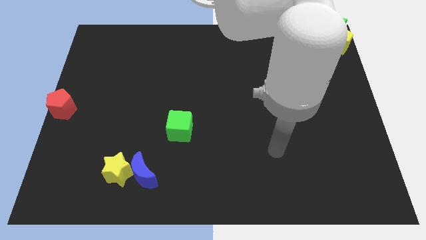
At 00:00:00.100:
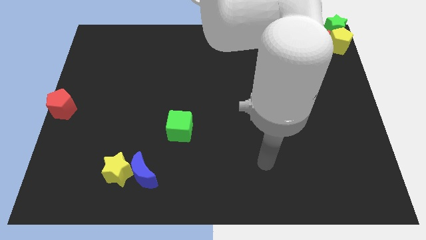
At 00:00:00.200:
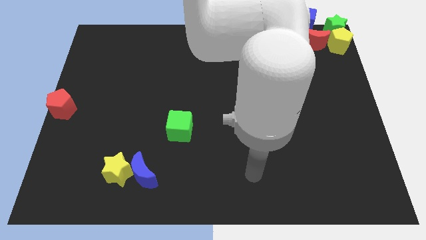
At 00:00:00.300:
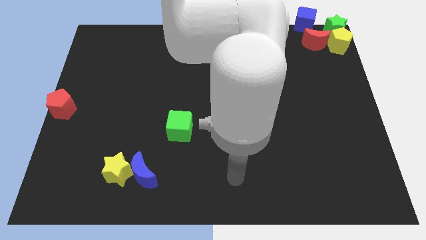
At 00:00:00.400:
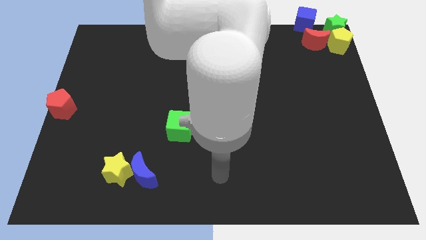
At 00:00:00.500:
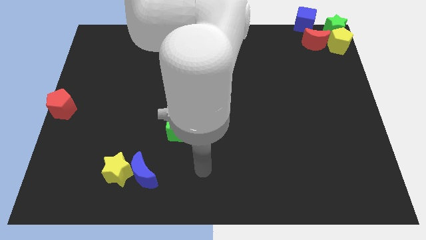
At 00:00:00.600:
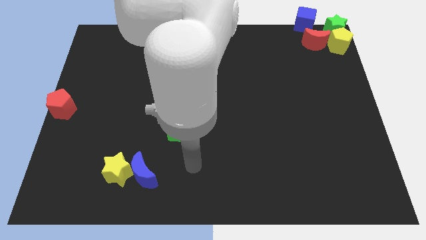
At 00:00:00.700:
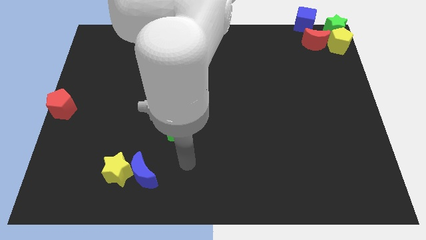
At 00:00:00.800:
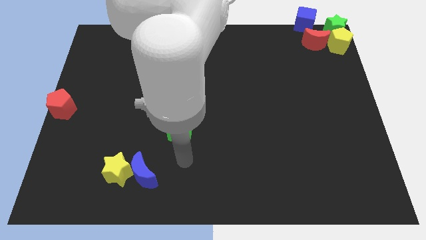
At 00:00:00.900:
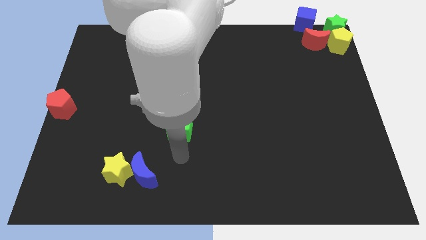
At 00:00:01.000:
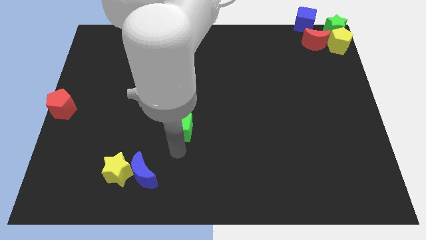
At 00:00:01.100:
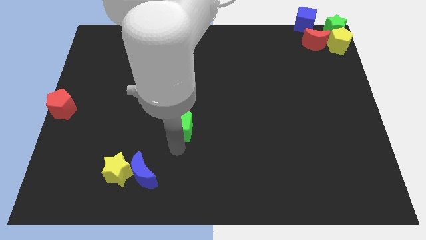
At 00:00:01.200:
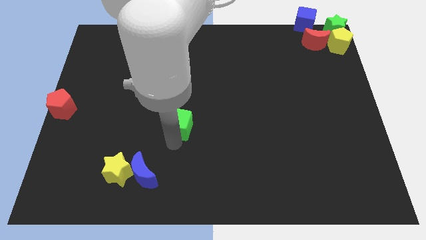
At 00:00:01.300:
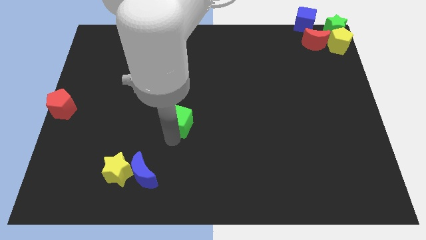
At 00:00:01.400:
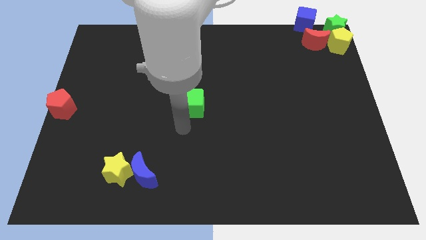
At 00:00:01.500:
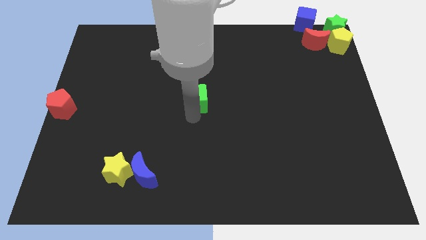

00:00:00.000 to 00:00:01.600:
place the green cube on the middle of the board

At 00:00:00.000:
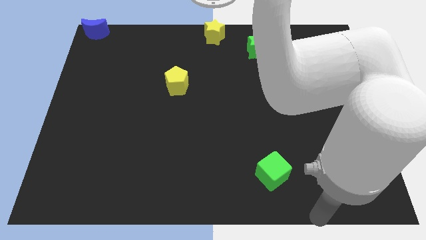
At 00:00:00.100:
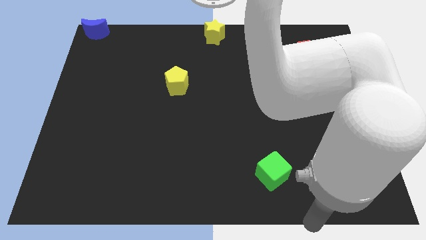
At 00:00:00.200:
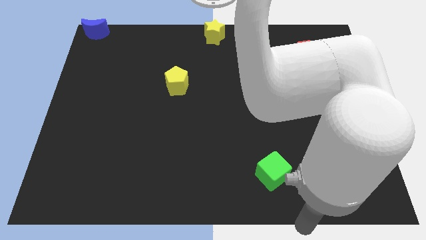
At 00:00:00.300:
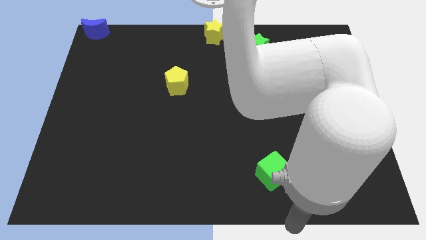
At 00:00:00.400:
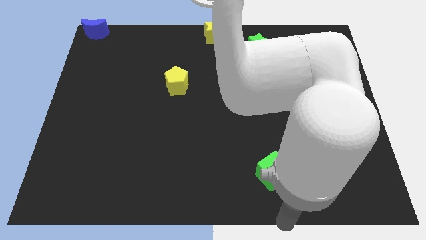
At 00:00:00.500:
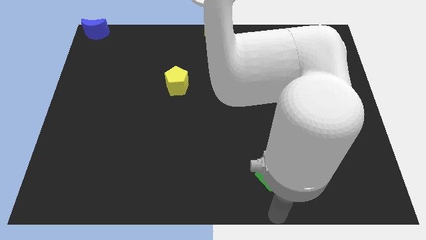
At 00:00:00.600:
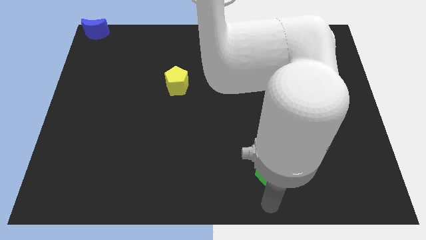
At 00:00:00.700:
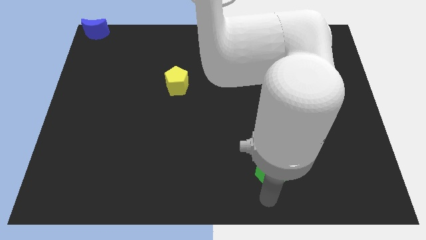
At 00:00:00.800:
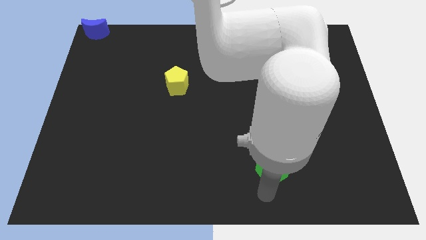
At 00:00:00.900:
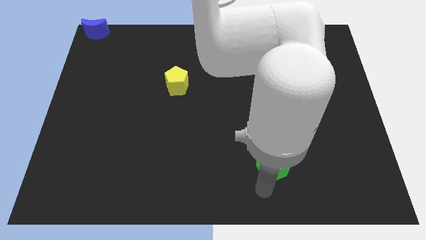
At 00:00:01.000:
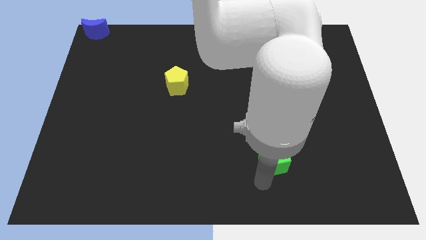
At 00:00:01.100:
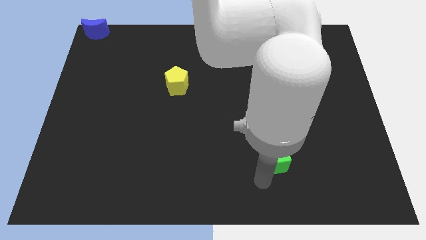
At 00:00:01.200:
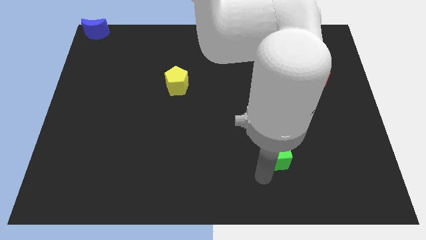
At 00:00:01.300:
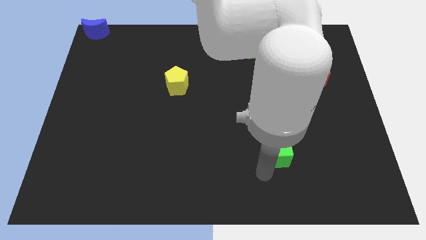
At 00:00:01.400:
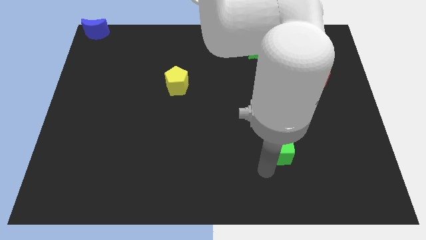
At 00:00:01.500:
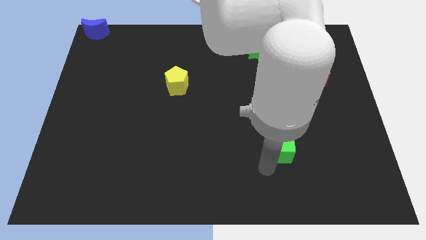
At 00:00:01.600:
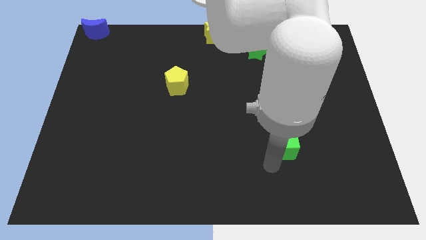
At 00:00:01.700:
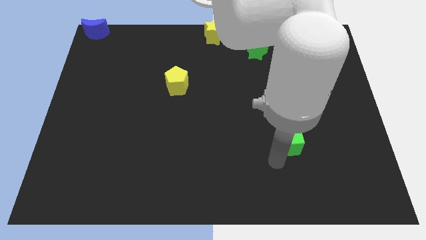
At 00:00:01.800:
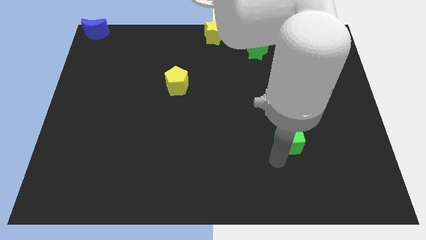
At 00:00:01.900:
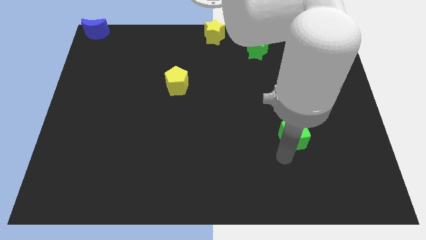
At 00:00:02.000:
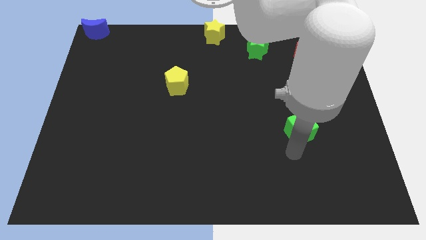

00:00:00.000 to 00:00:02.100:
push the green cube to the top of the board

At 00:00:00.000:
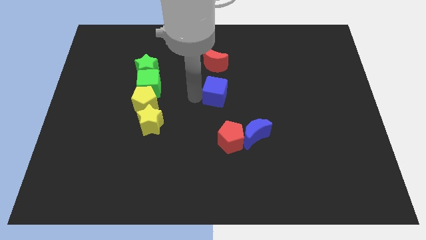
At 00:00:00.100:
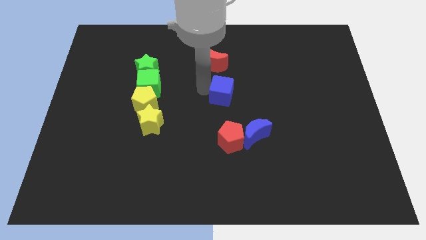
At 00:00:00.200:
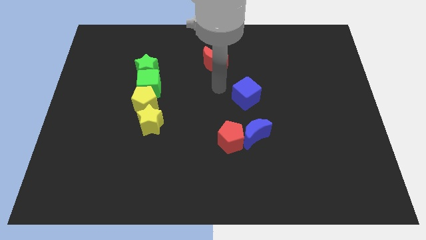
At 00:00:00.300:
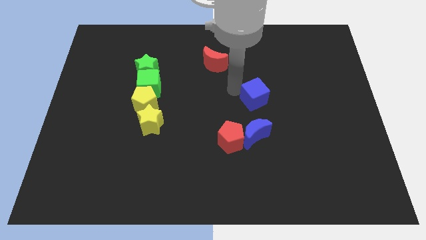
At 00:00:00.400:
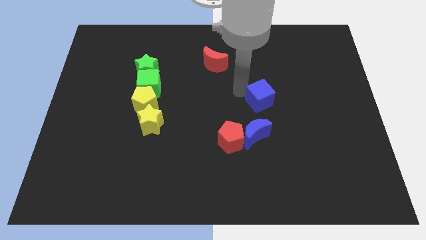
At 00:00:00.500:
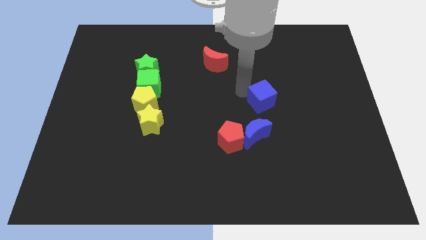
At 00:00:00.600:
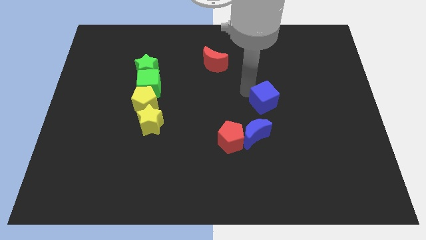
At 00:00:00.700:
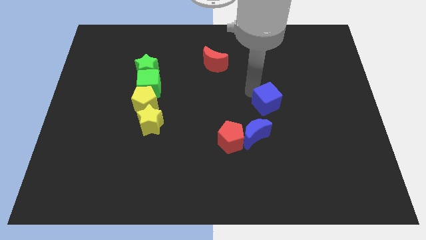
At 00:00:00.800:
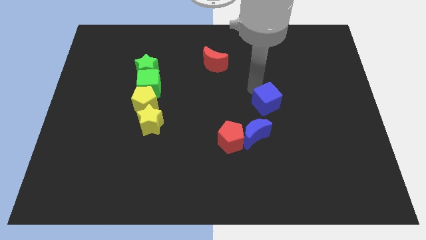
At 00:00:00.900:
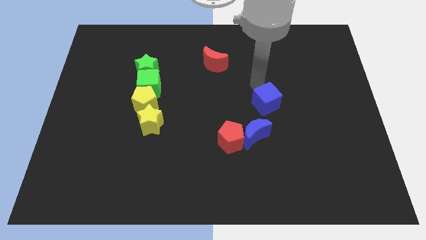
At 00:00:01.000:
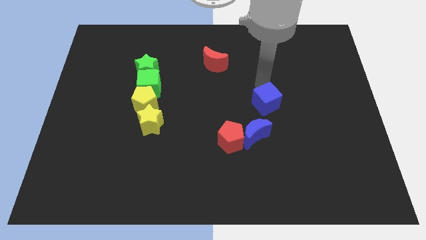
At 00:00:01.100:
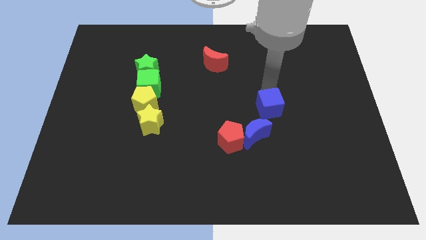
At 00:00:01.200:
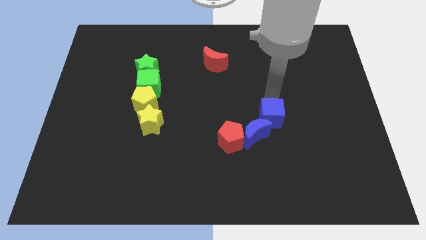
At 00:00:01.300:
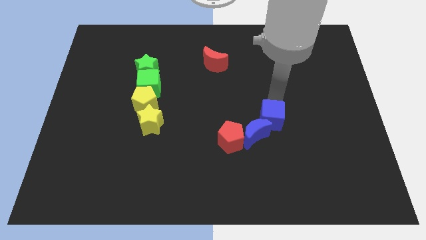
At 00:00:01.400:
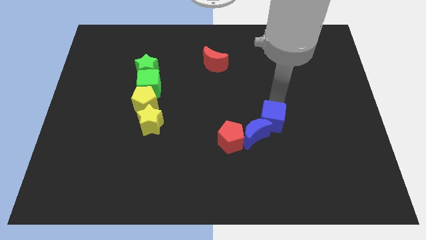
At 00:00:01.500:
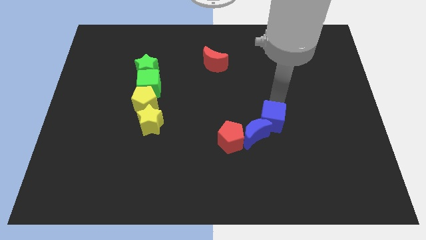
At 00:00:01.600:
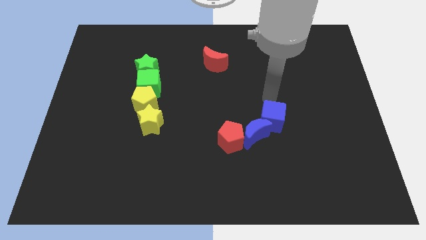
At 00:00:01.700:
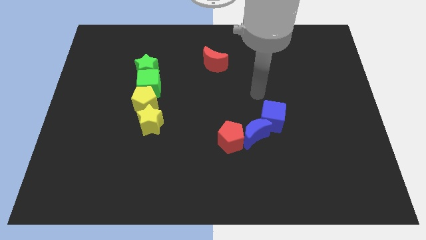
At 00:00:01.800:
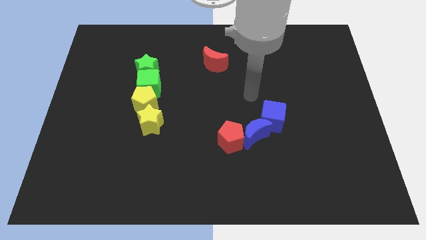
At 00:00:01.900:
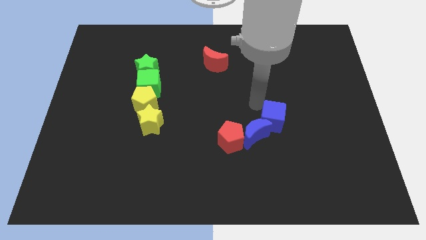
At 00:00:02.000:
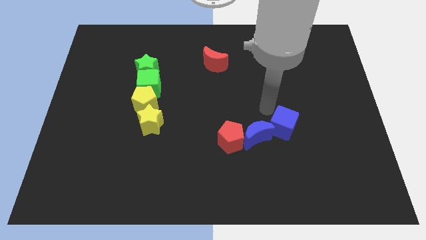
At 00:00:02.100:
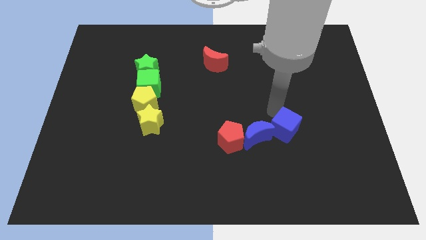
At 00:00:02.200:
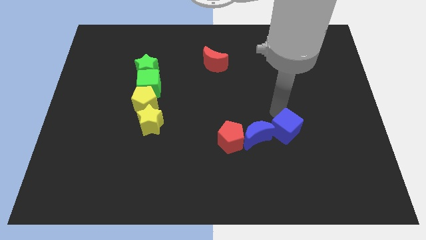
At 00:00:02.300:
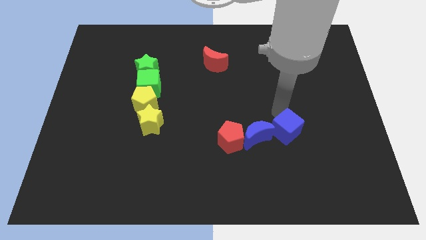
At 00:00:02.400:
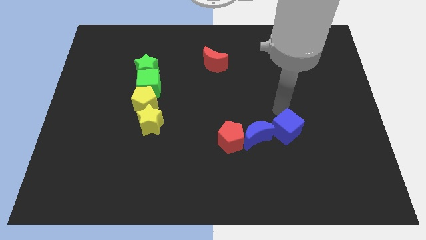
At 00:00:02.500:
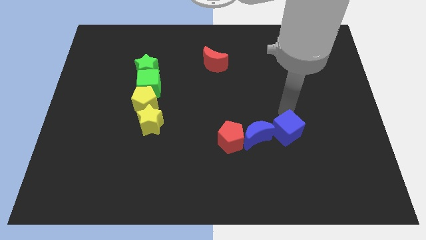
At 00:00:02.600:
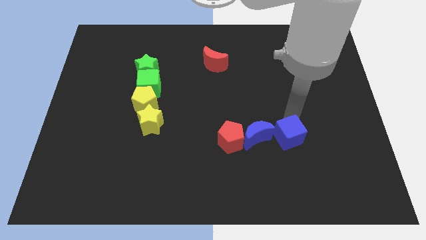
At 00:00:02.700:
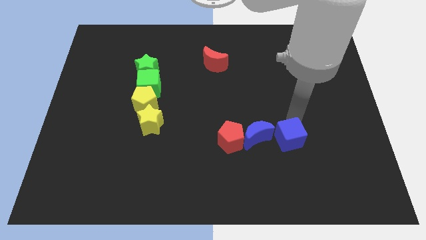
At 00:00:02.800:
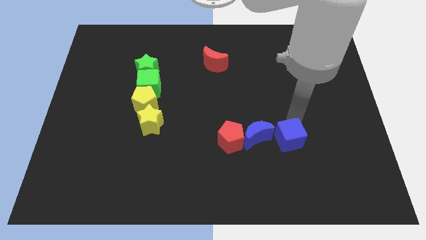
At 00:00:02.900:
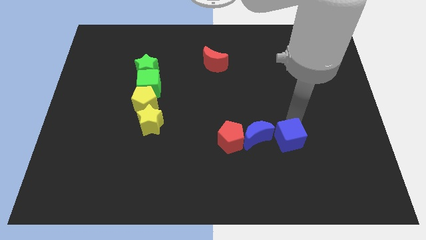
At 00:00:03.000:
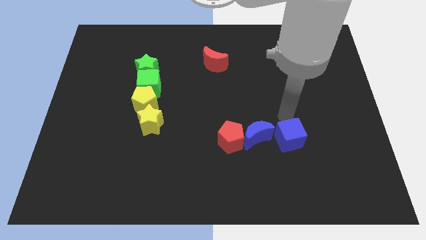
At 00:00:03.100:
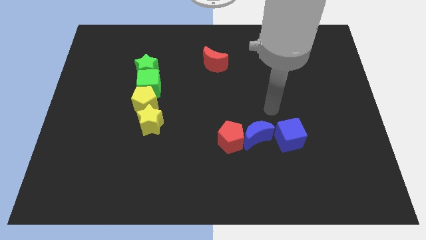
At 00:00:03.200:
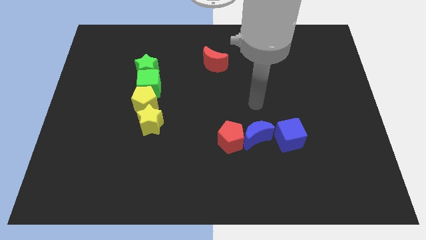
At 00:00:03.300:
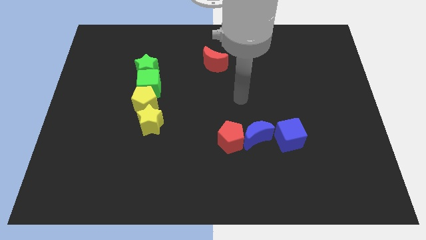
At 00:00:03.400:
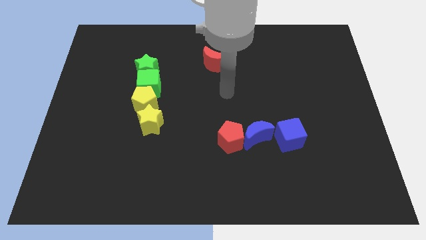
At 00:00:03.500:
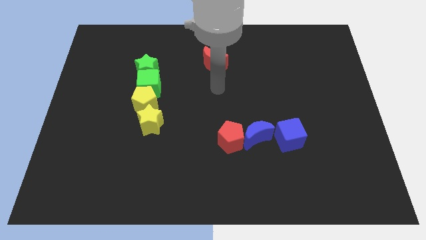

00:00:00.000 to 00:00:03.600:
move the blue cube to the right of the blue moon

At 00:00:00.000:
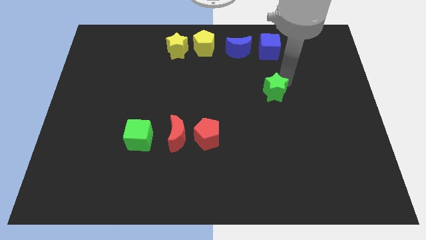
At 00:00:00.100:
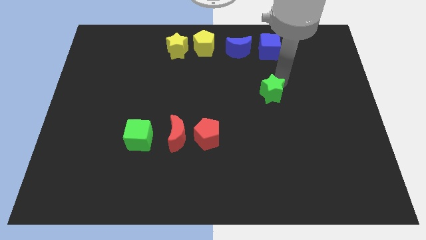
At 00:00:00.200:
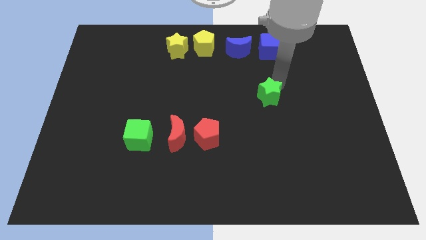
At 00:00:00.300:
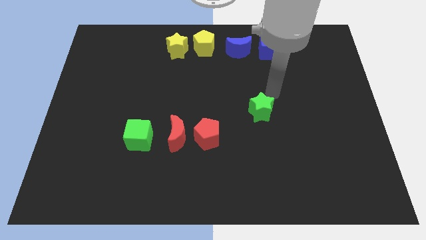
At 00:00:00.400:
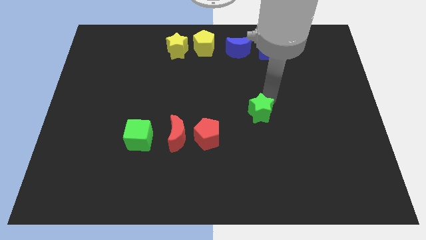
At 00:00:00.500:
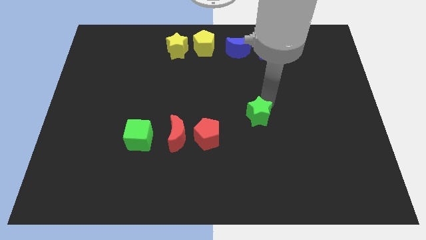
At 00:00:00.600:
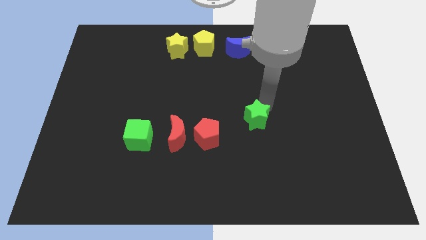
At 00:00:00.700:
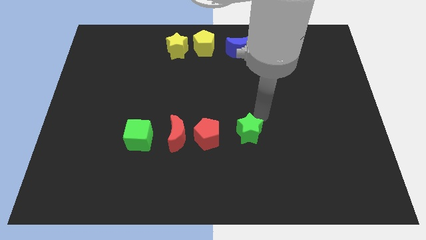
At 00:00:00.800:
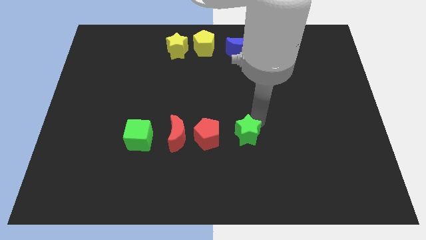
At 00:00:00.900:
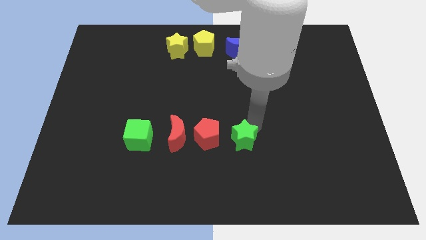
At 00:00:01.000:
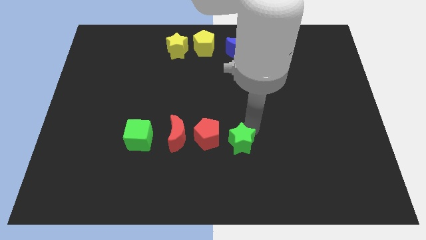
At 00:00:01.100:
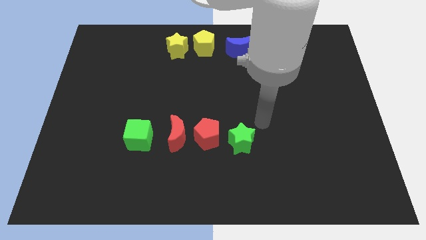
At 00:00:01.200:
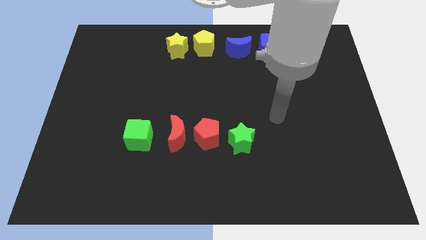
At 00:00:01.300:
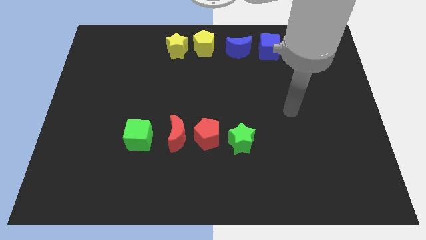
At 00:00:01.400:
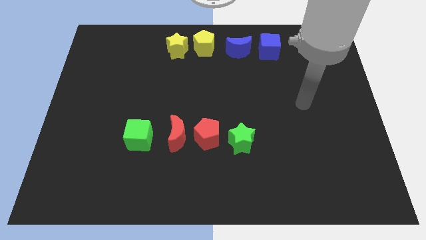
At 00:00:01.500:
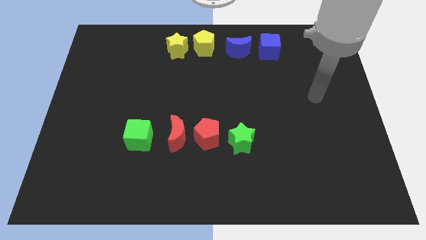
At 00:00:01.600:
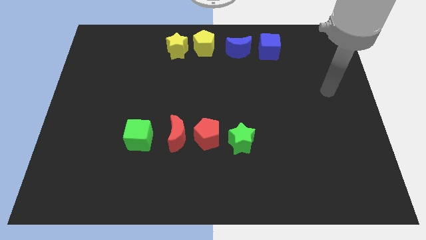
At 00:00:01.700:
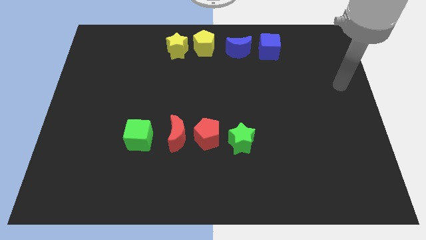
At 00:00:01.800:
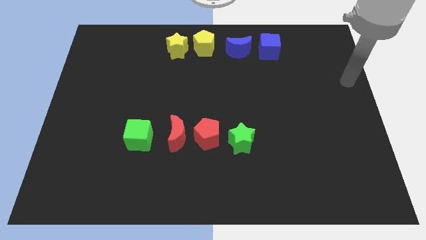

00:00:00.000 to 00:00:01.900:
place the green star to the right of the red pentagon
